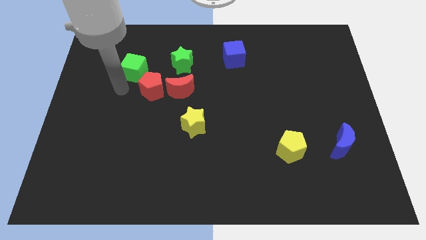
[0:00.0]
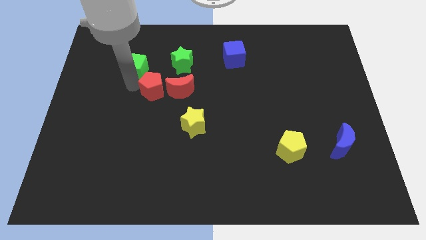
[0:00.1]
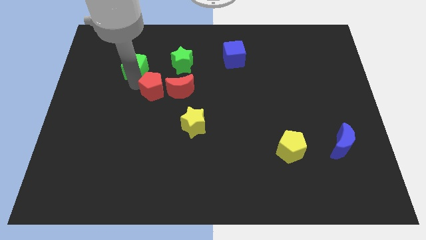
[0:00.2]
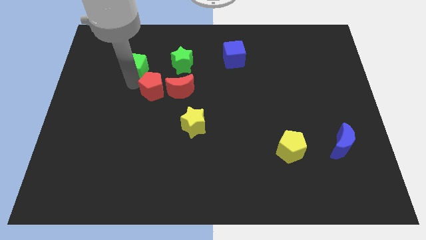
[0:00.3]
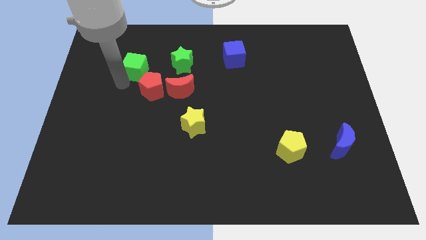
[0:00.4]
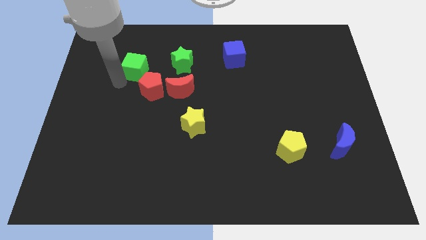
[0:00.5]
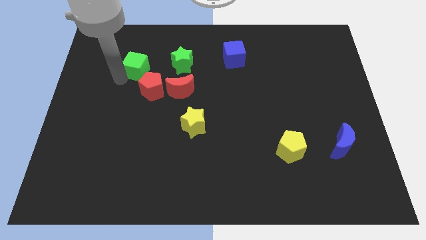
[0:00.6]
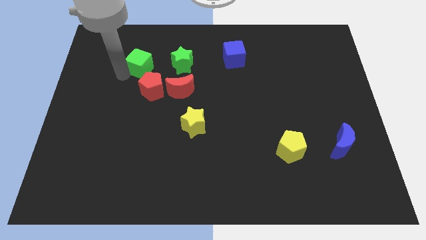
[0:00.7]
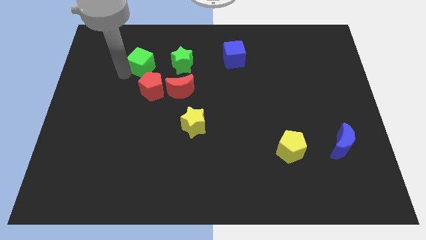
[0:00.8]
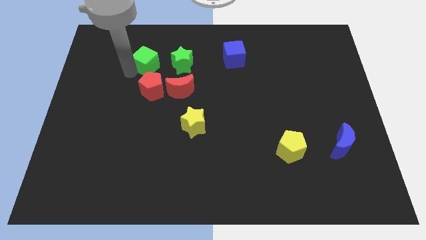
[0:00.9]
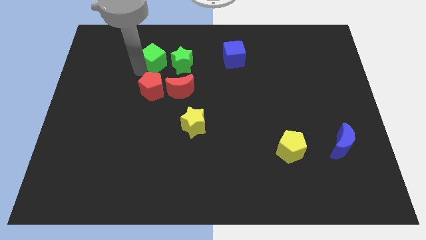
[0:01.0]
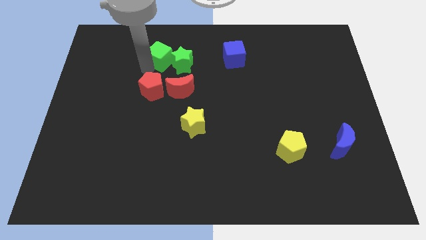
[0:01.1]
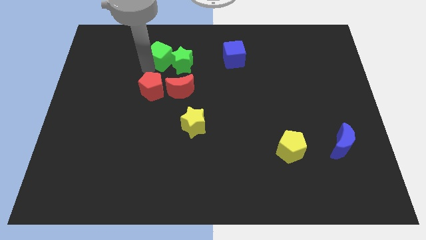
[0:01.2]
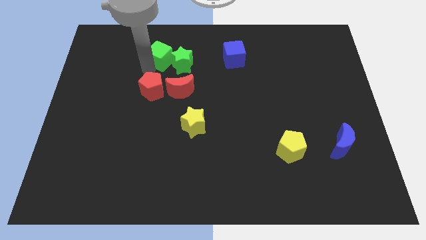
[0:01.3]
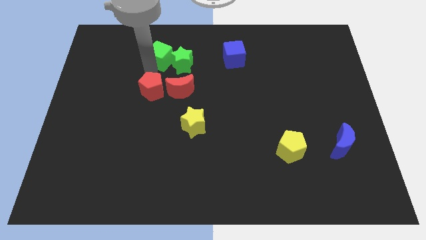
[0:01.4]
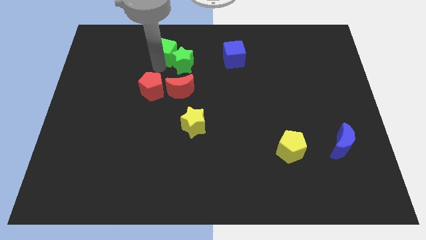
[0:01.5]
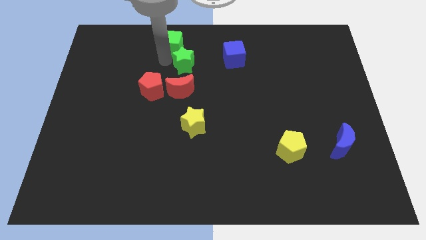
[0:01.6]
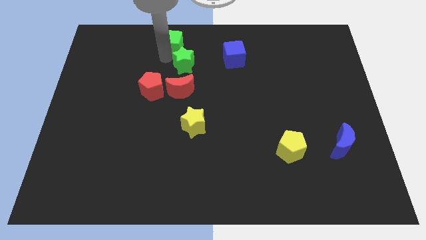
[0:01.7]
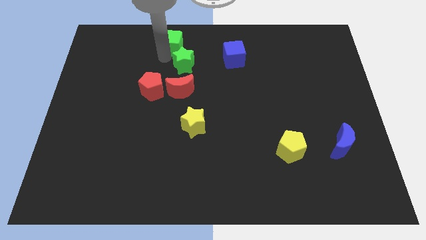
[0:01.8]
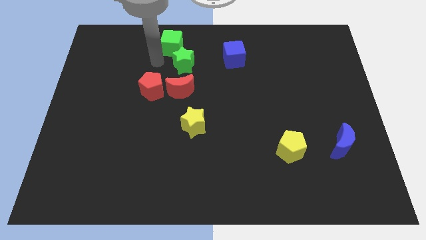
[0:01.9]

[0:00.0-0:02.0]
place the green cube to the top left side of the green star

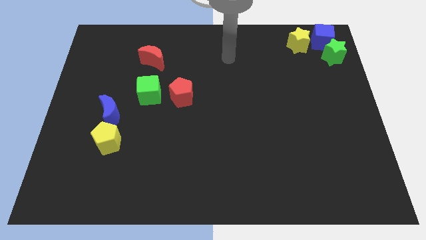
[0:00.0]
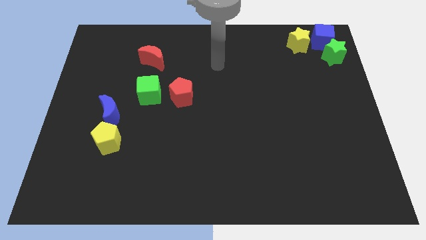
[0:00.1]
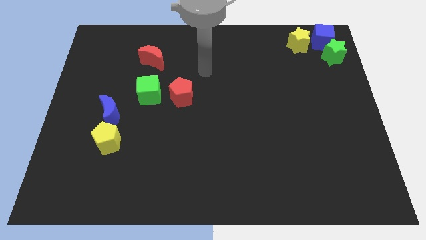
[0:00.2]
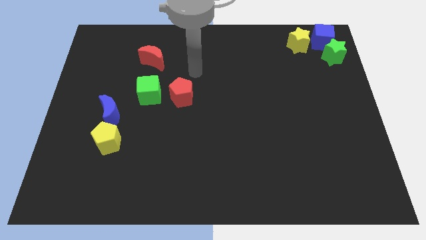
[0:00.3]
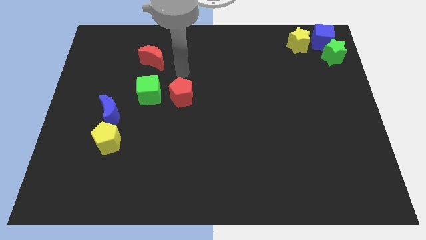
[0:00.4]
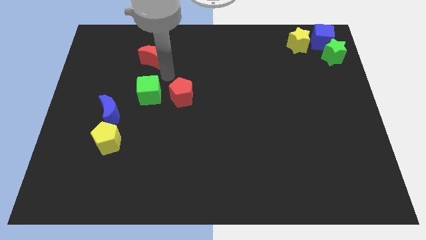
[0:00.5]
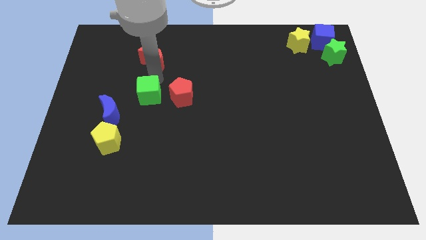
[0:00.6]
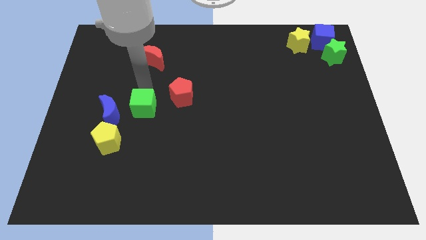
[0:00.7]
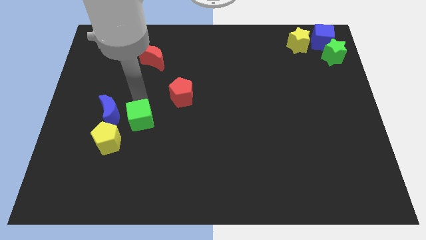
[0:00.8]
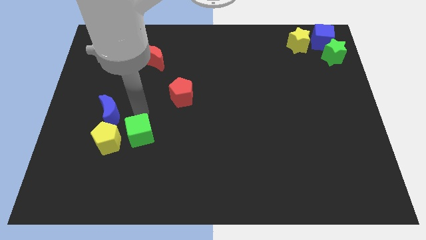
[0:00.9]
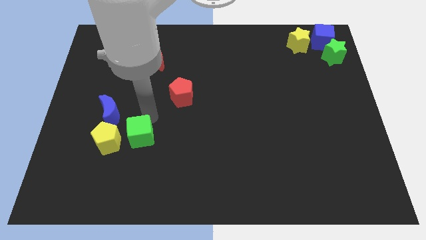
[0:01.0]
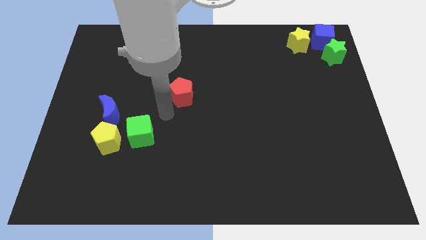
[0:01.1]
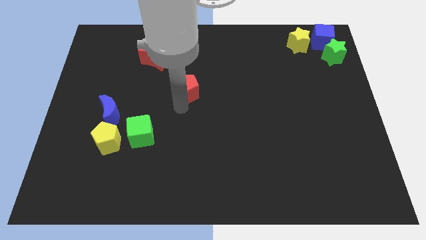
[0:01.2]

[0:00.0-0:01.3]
push the green cube slightly to the bottom

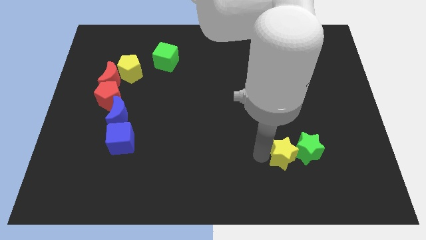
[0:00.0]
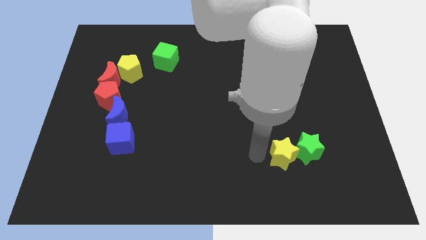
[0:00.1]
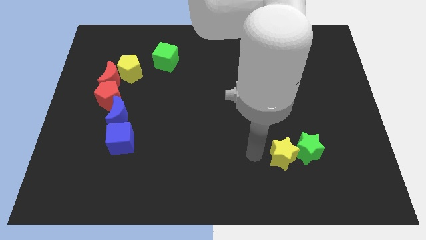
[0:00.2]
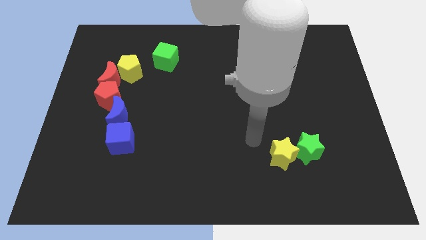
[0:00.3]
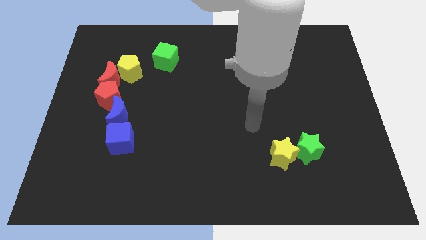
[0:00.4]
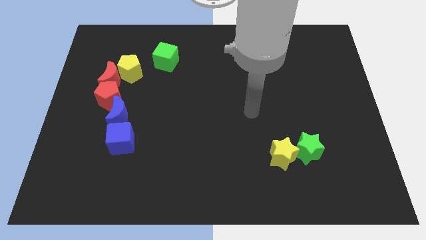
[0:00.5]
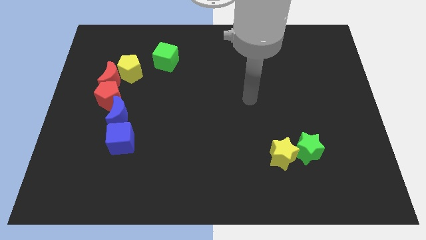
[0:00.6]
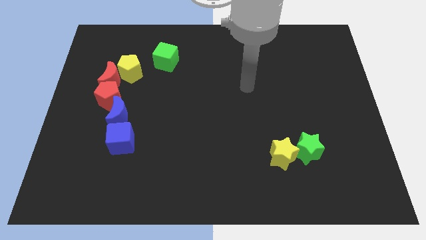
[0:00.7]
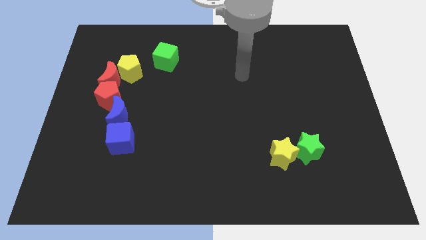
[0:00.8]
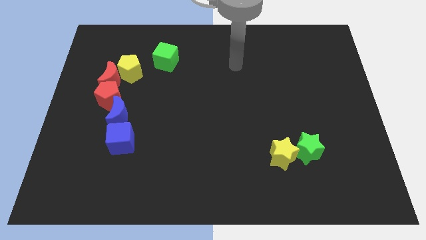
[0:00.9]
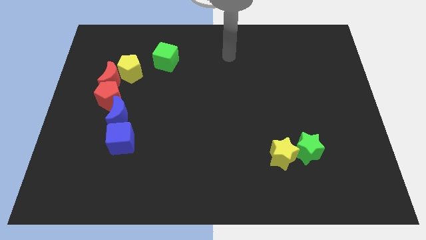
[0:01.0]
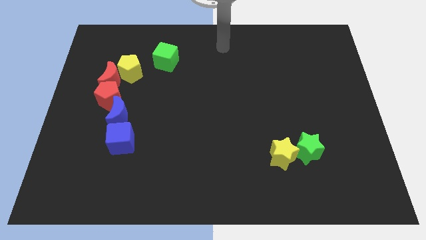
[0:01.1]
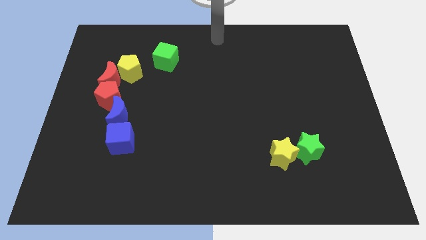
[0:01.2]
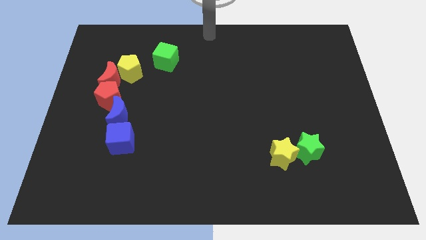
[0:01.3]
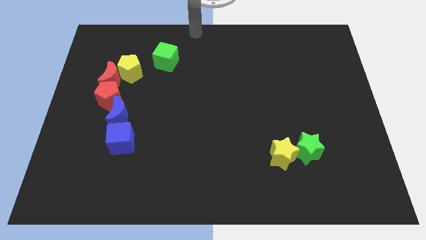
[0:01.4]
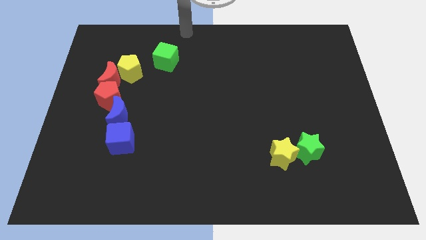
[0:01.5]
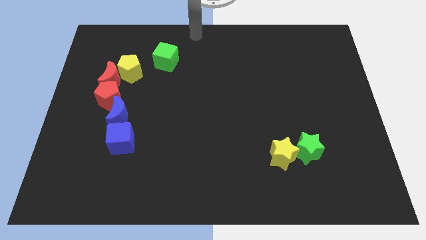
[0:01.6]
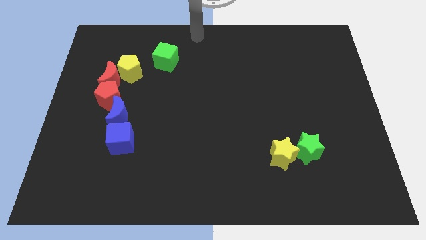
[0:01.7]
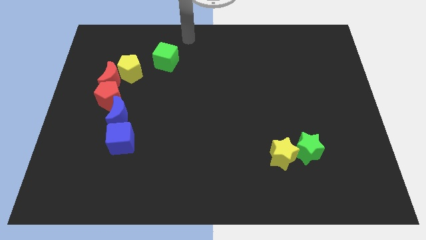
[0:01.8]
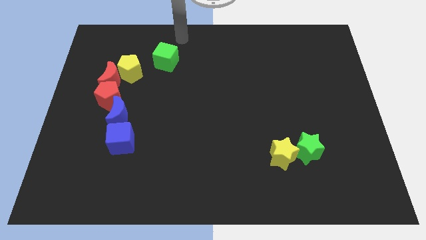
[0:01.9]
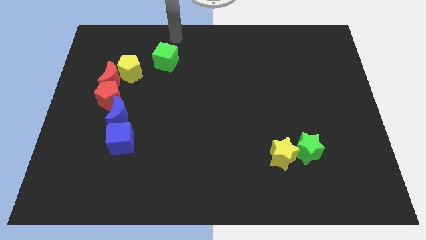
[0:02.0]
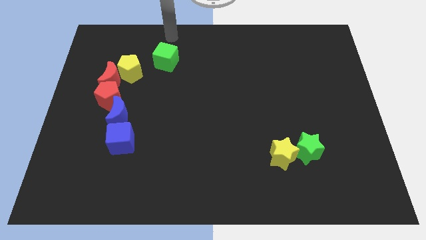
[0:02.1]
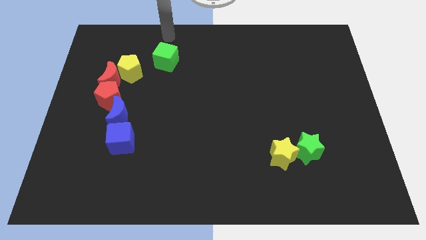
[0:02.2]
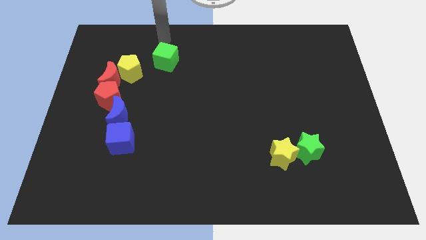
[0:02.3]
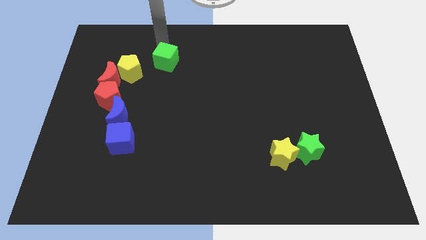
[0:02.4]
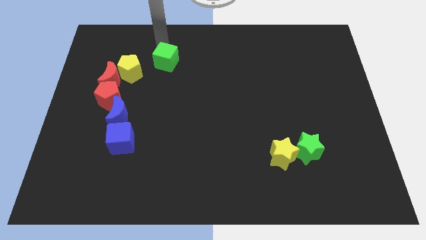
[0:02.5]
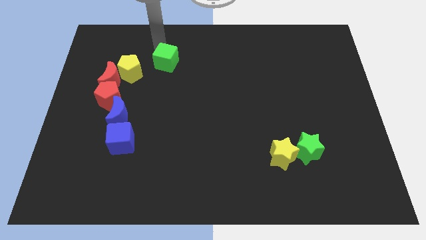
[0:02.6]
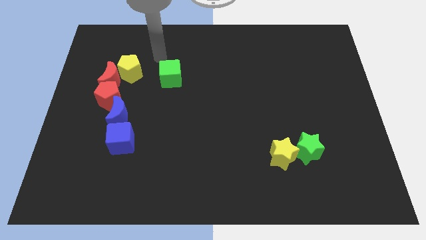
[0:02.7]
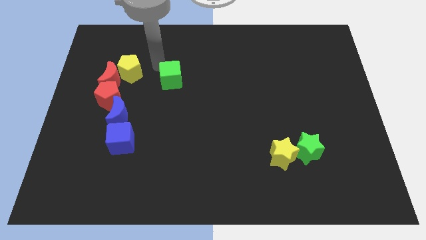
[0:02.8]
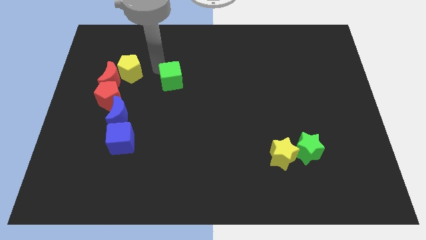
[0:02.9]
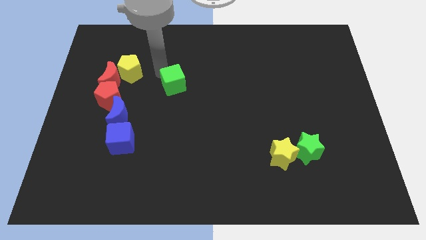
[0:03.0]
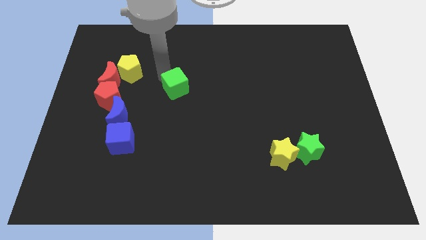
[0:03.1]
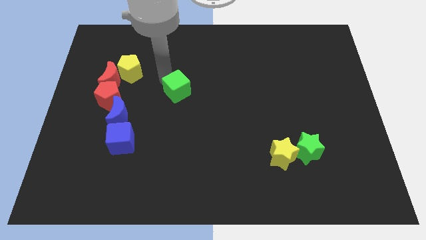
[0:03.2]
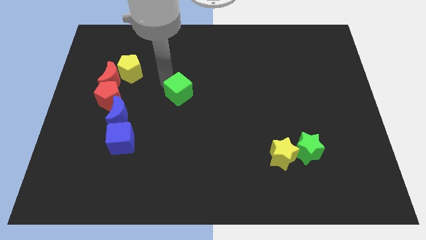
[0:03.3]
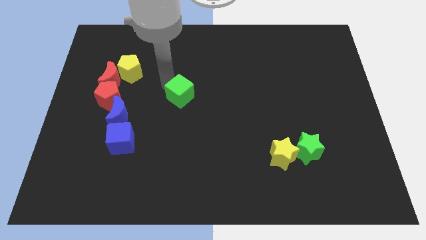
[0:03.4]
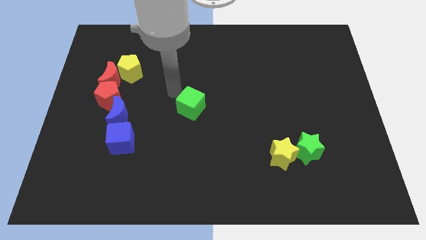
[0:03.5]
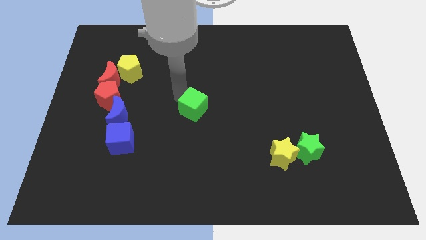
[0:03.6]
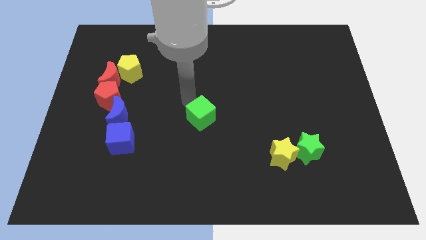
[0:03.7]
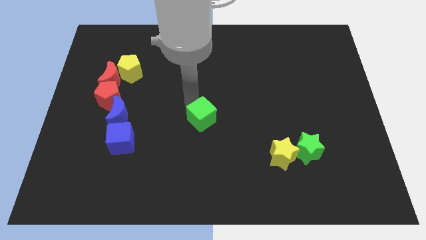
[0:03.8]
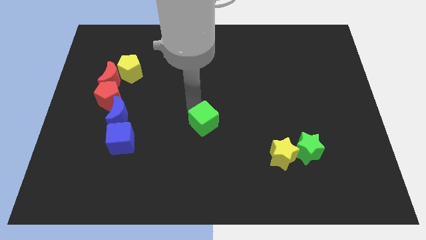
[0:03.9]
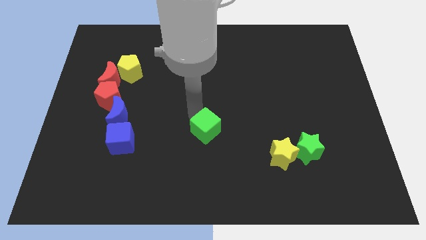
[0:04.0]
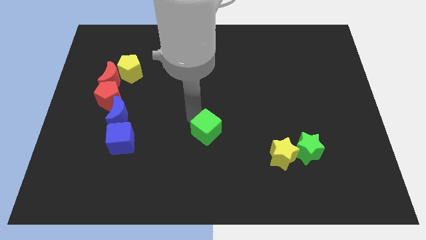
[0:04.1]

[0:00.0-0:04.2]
place the green cube at the center of the board

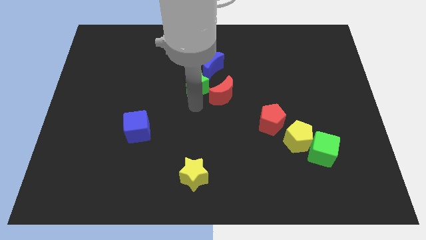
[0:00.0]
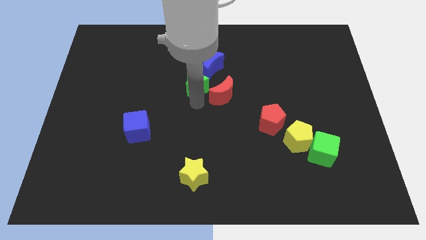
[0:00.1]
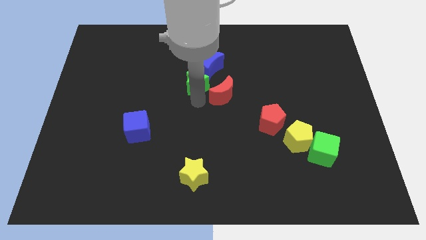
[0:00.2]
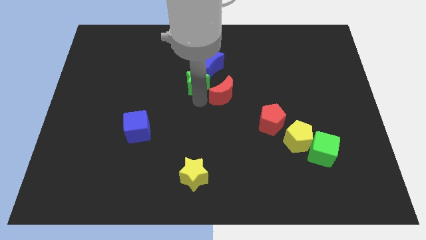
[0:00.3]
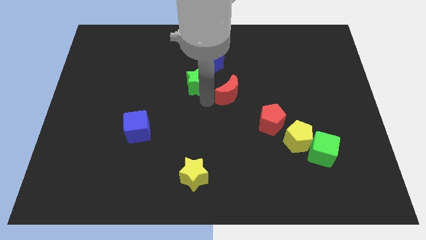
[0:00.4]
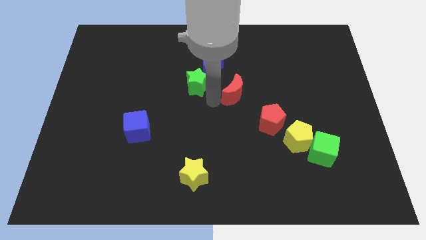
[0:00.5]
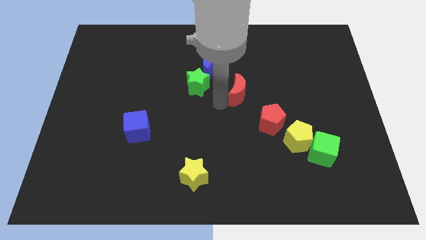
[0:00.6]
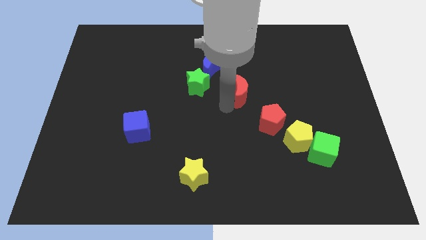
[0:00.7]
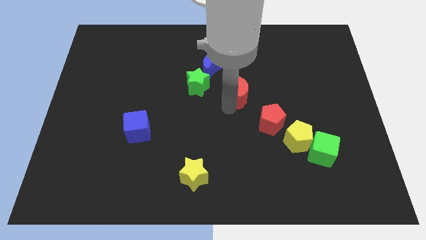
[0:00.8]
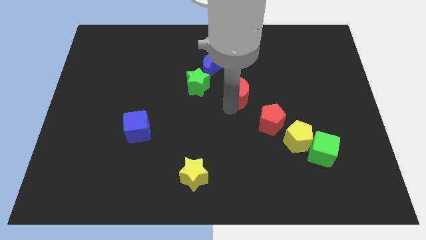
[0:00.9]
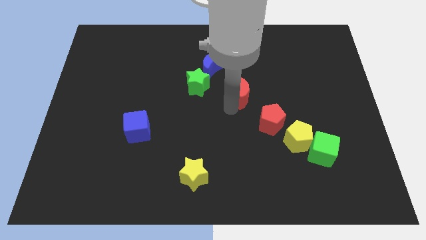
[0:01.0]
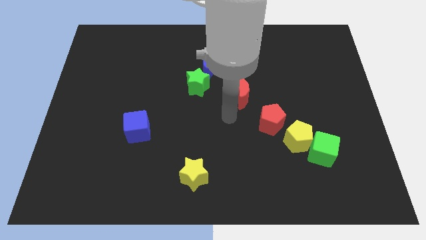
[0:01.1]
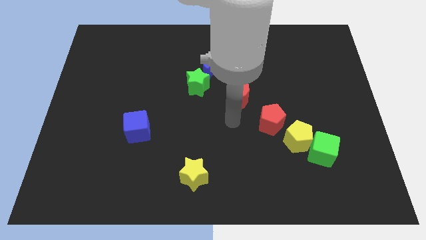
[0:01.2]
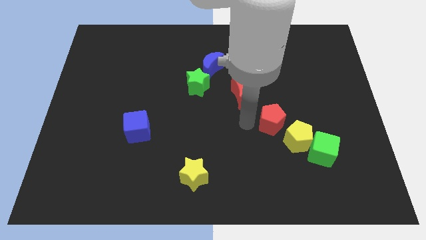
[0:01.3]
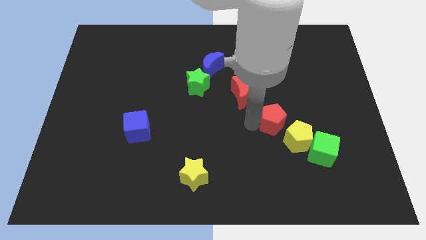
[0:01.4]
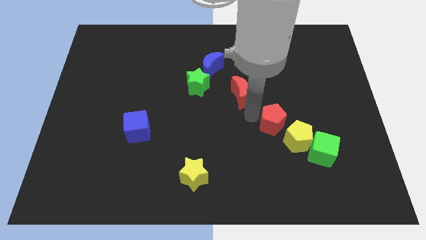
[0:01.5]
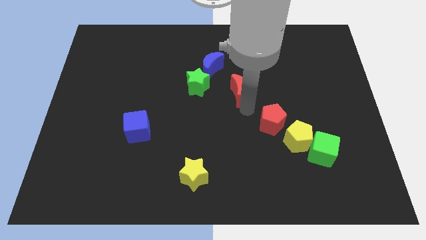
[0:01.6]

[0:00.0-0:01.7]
place the red moon in between the green star and red pentagon
